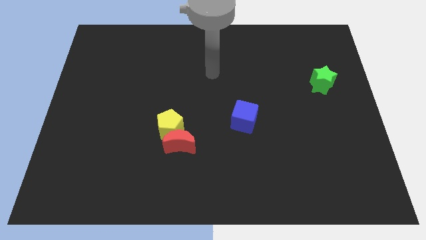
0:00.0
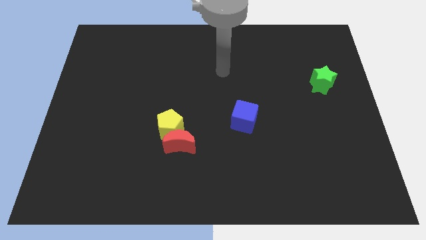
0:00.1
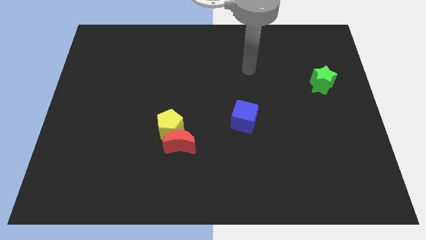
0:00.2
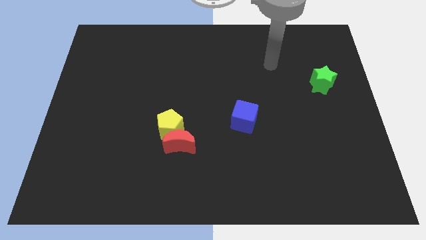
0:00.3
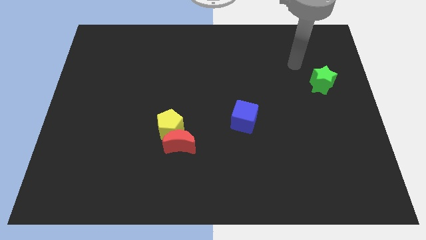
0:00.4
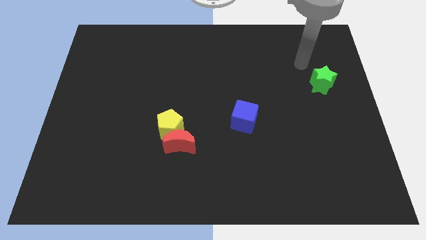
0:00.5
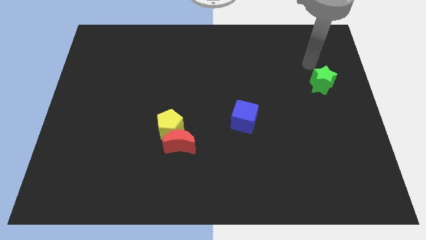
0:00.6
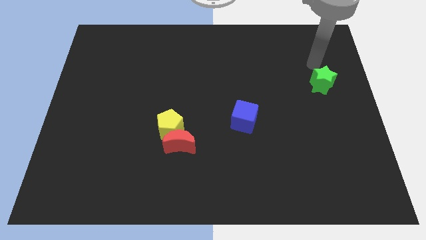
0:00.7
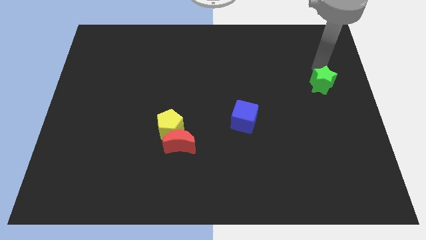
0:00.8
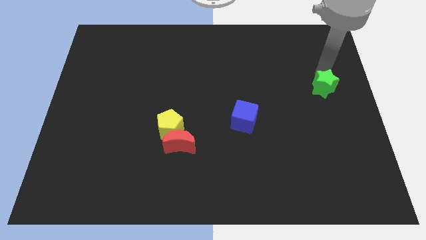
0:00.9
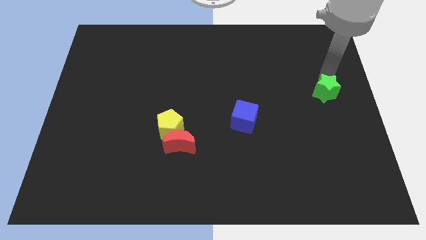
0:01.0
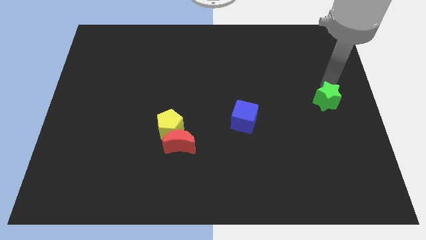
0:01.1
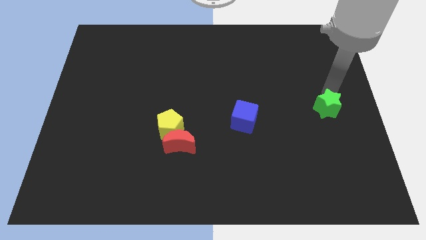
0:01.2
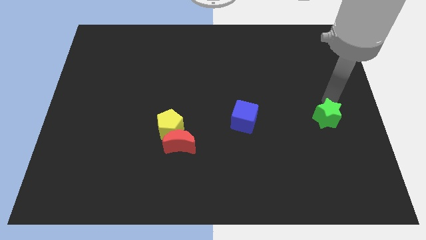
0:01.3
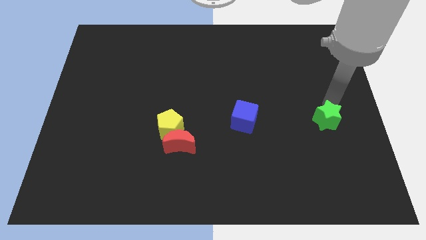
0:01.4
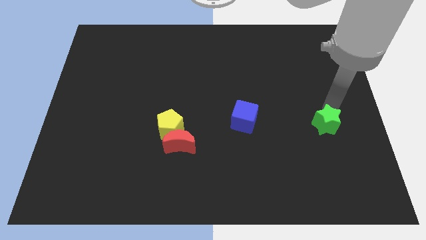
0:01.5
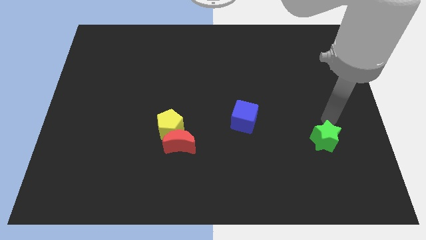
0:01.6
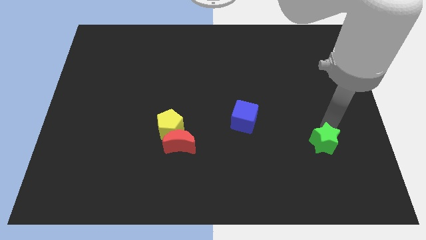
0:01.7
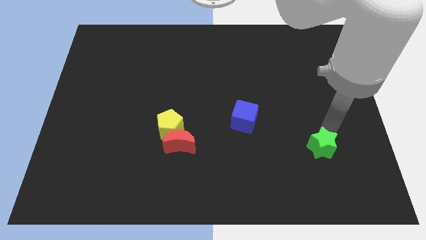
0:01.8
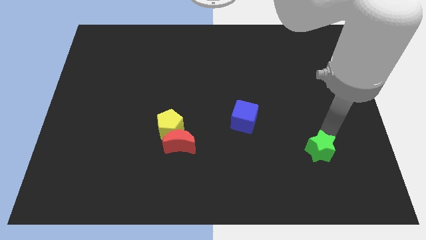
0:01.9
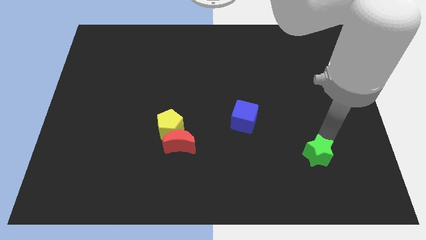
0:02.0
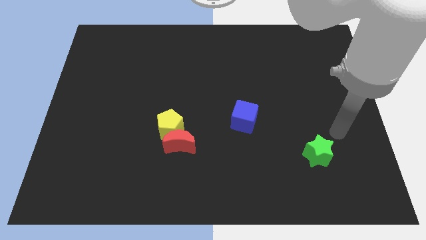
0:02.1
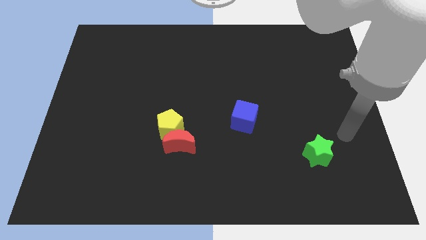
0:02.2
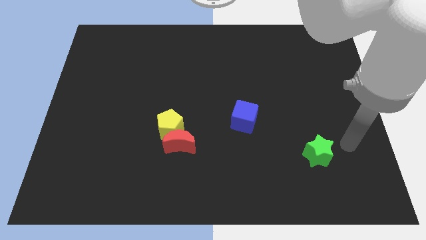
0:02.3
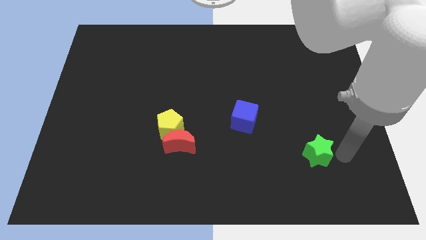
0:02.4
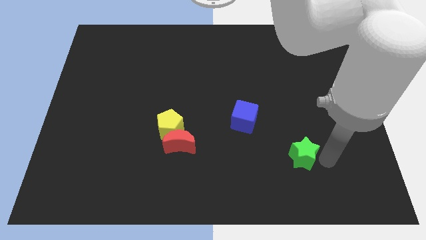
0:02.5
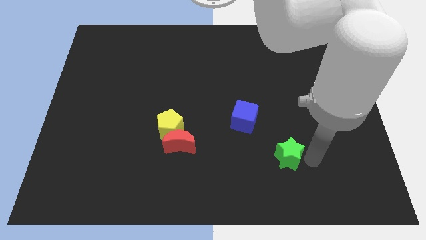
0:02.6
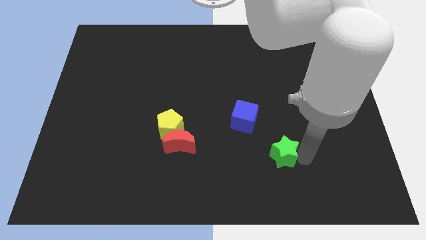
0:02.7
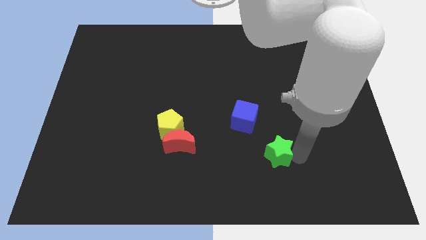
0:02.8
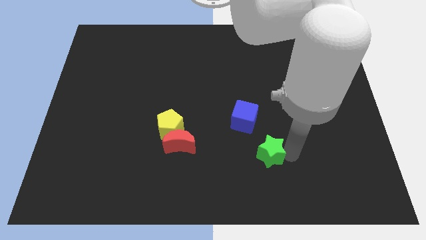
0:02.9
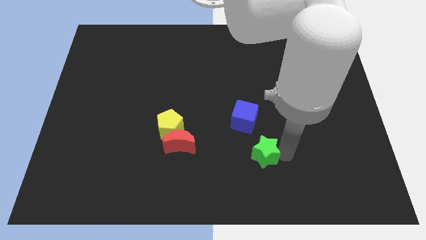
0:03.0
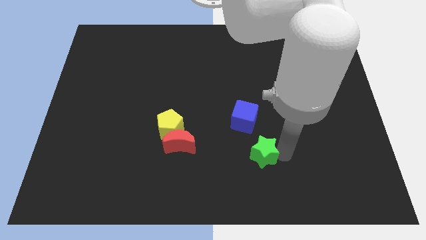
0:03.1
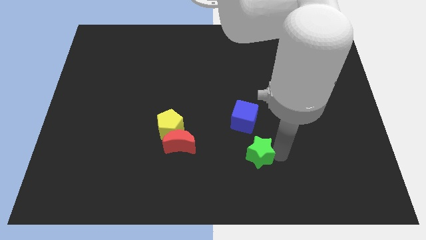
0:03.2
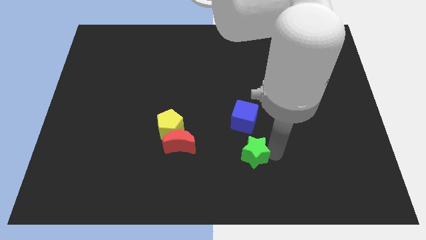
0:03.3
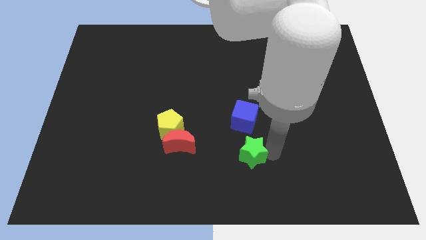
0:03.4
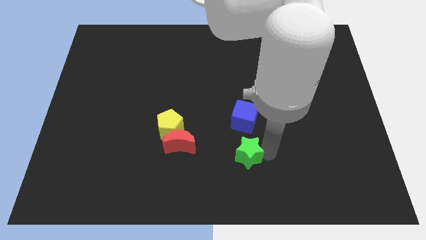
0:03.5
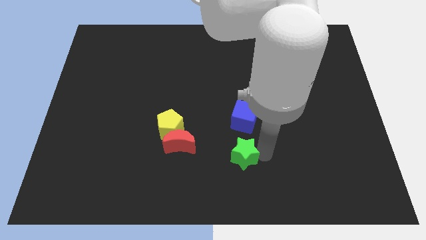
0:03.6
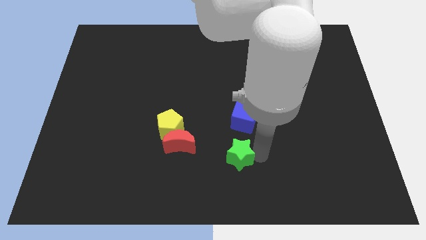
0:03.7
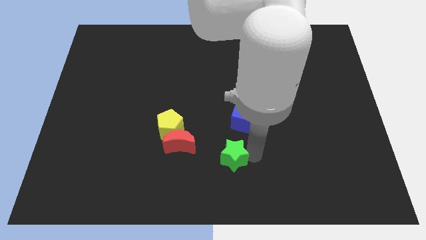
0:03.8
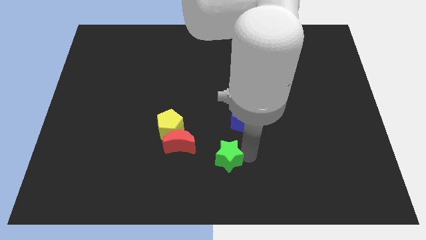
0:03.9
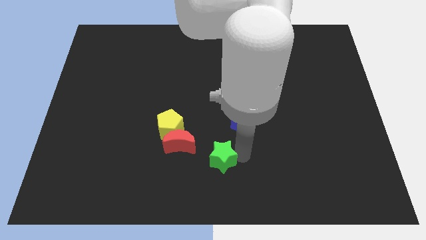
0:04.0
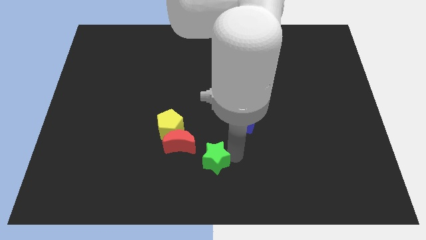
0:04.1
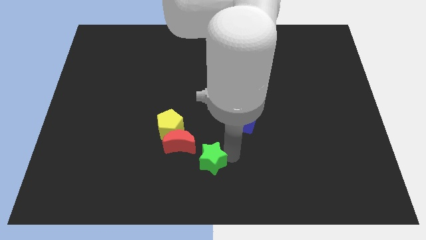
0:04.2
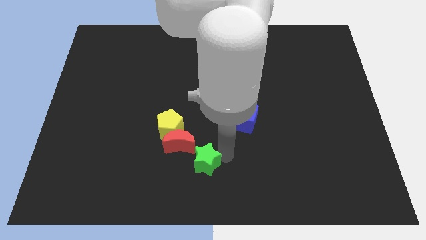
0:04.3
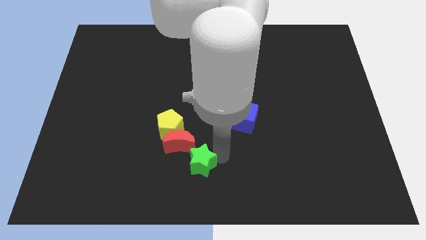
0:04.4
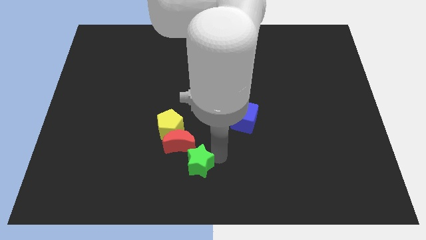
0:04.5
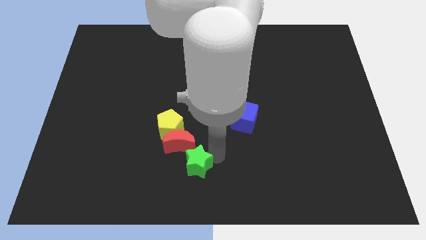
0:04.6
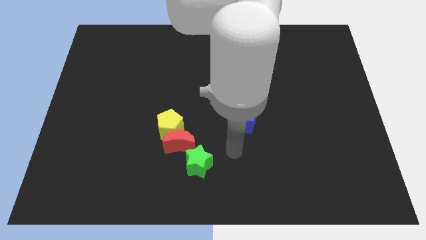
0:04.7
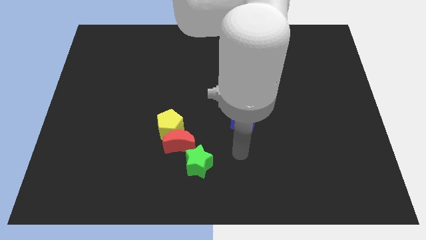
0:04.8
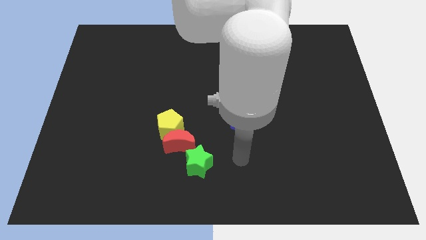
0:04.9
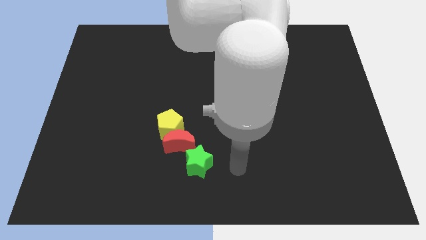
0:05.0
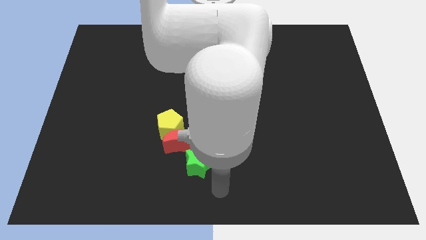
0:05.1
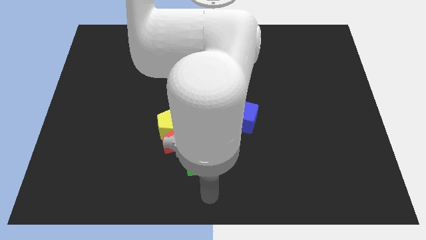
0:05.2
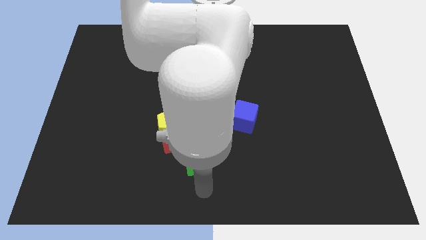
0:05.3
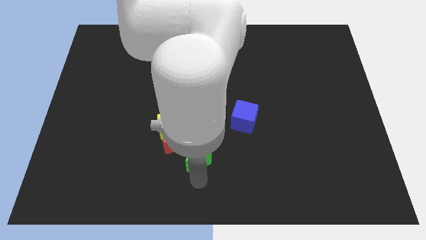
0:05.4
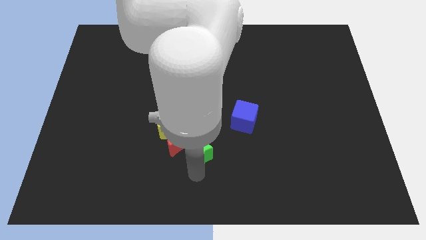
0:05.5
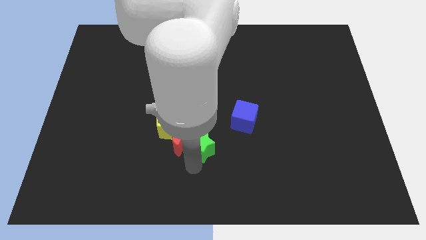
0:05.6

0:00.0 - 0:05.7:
put the green star close to the red moon

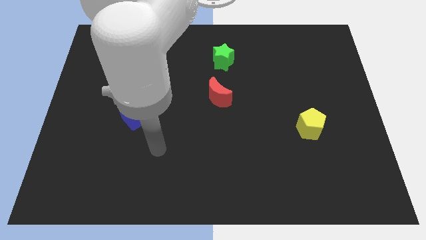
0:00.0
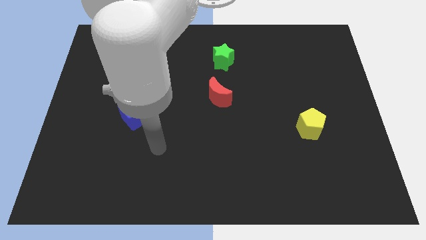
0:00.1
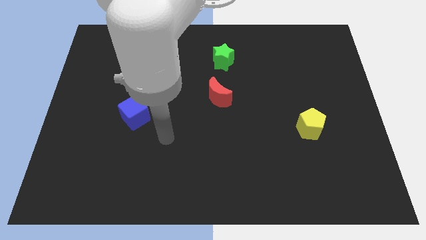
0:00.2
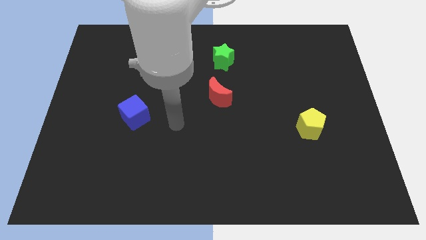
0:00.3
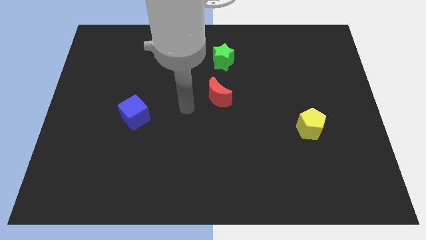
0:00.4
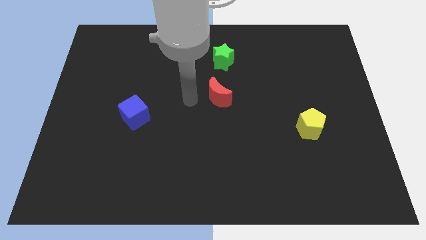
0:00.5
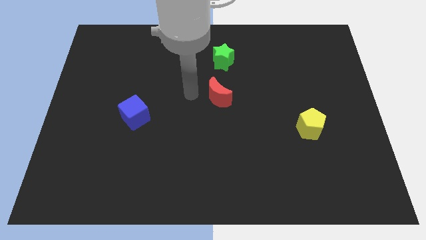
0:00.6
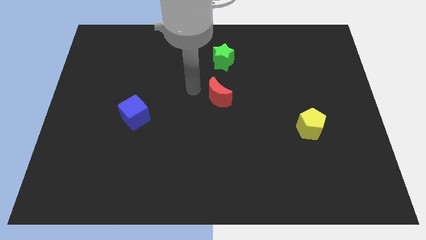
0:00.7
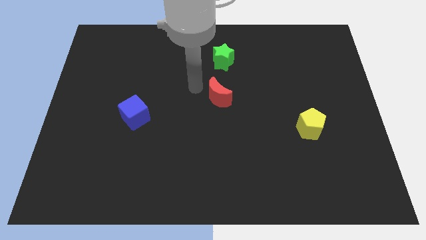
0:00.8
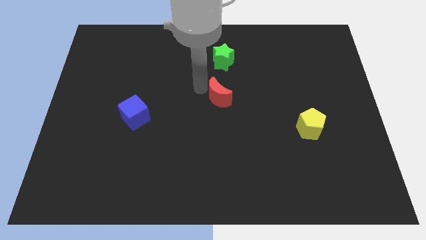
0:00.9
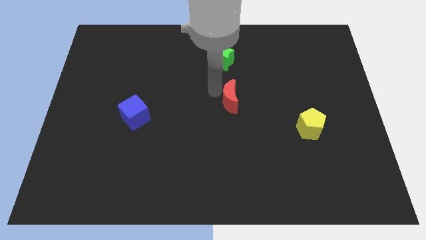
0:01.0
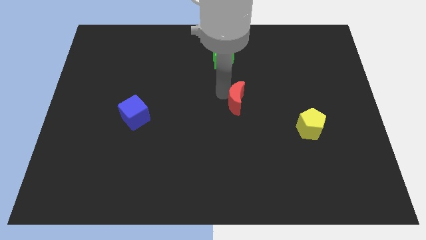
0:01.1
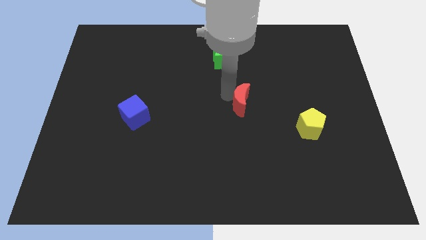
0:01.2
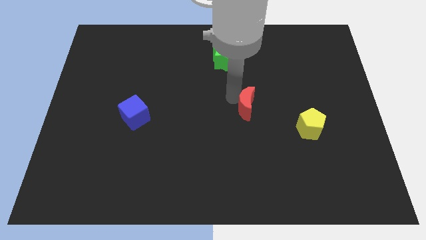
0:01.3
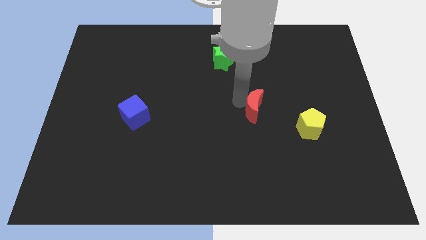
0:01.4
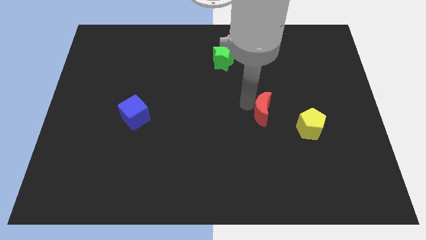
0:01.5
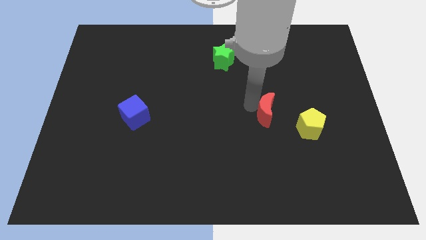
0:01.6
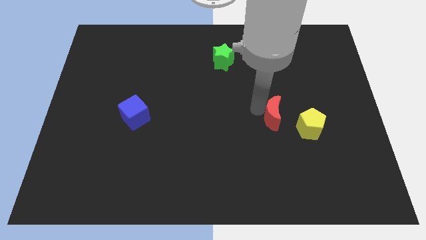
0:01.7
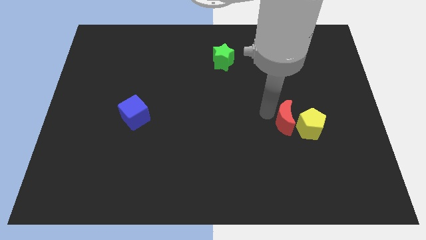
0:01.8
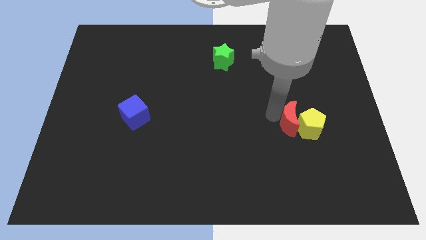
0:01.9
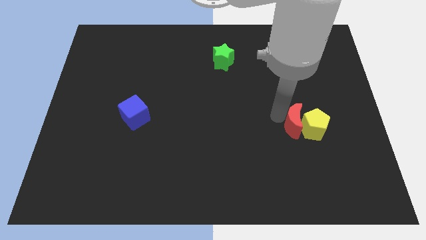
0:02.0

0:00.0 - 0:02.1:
slide the red block next to the yellow block

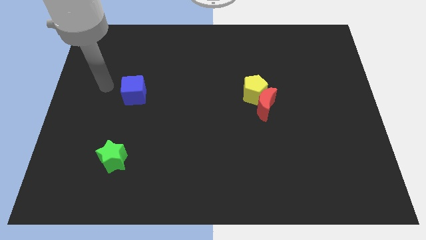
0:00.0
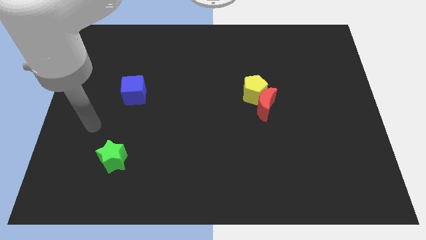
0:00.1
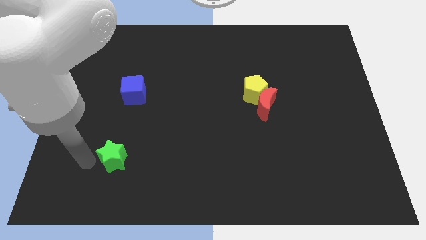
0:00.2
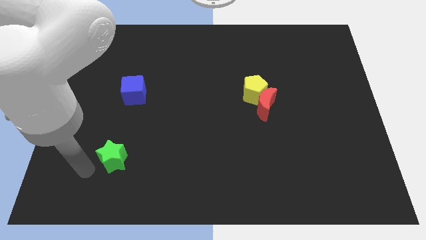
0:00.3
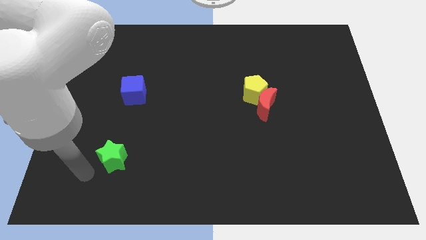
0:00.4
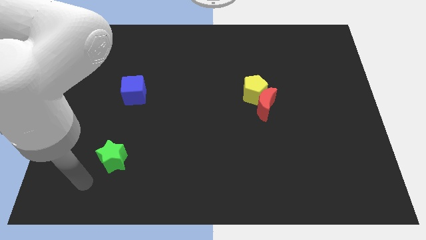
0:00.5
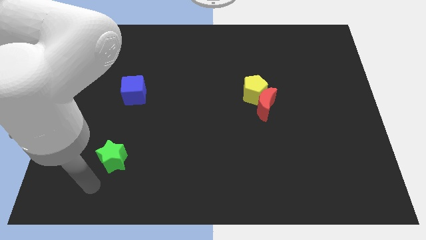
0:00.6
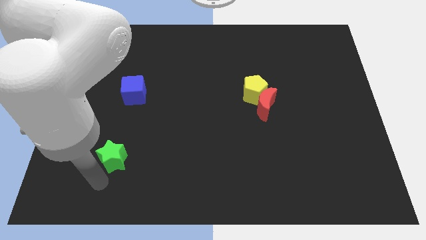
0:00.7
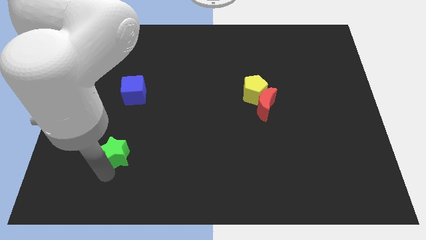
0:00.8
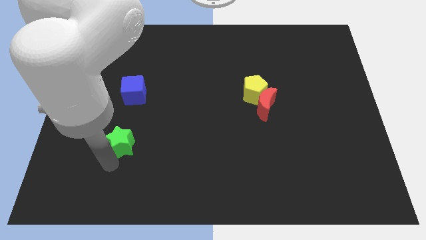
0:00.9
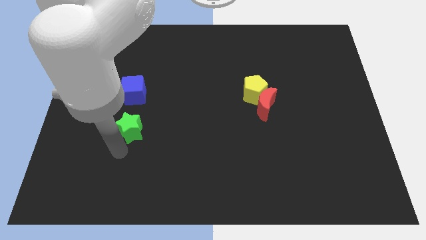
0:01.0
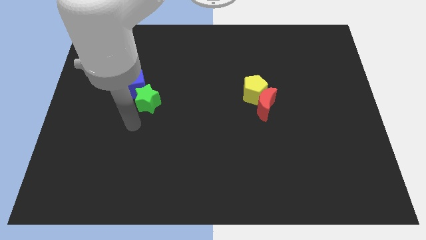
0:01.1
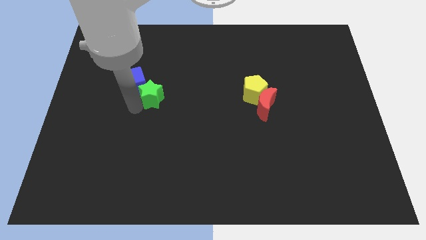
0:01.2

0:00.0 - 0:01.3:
move the green block next to the blue block
